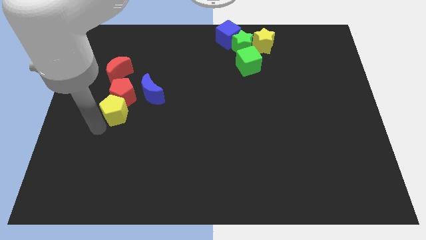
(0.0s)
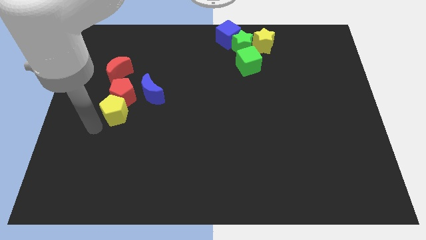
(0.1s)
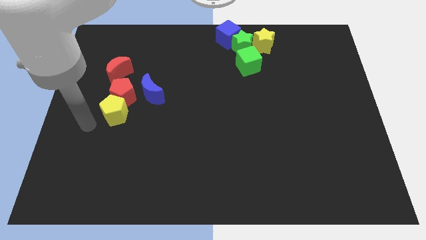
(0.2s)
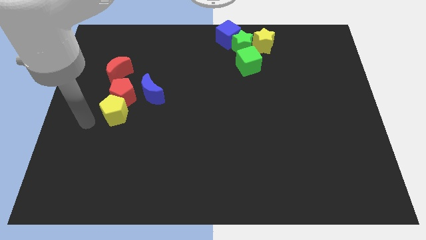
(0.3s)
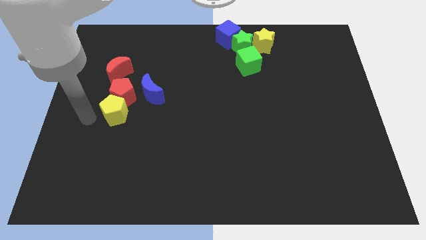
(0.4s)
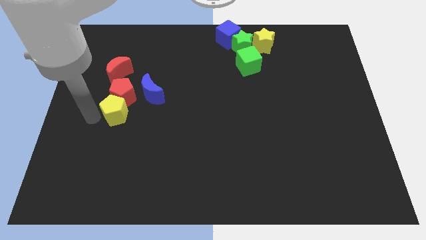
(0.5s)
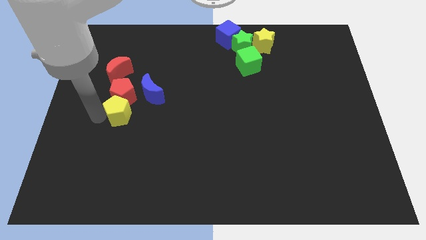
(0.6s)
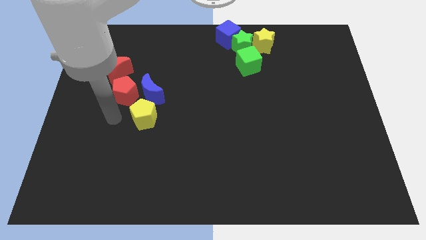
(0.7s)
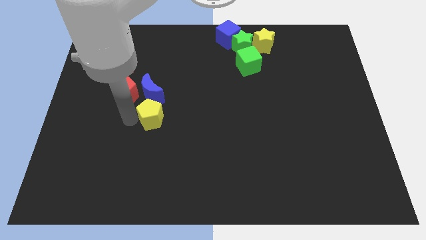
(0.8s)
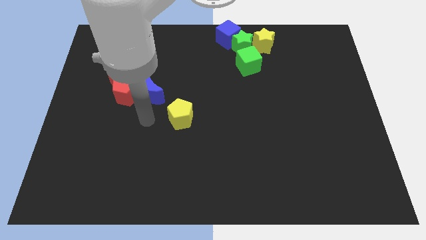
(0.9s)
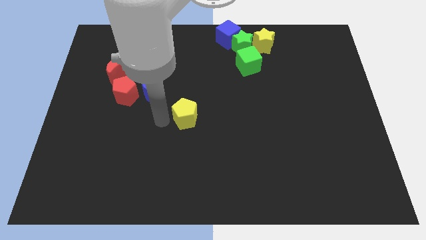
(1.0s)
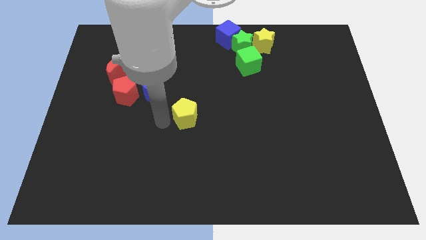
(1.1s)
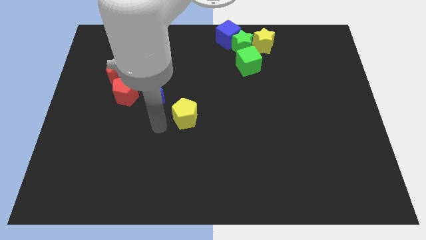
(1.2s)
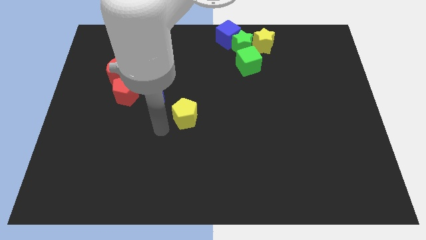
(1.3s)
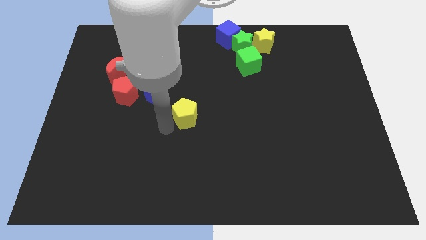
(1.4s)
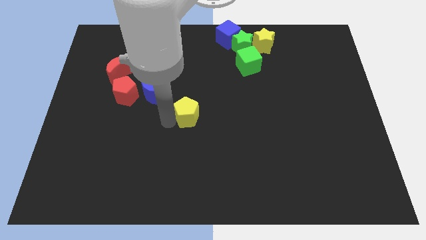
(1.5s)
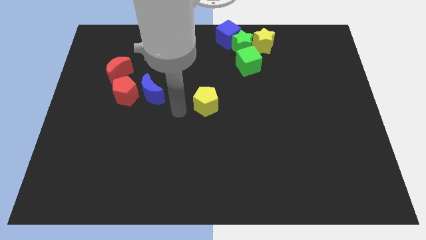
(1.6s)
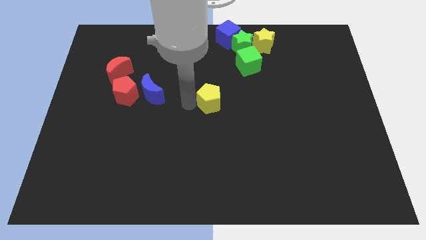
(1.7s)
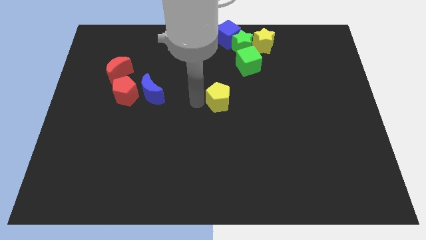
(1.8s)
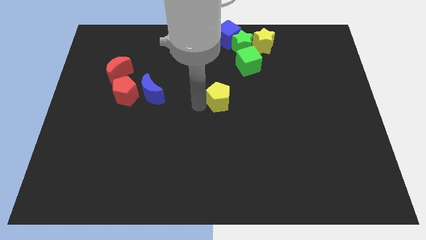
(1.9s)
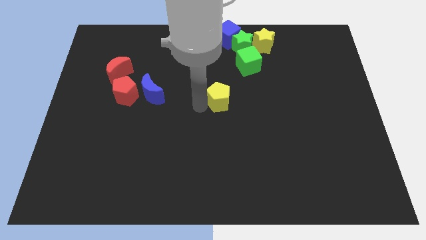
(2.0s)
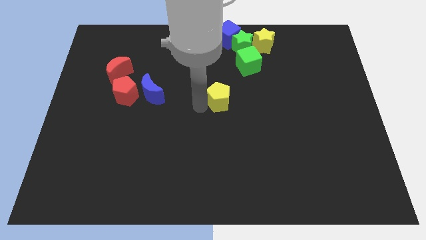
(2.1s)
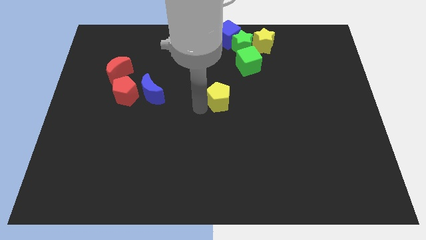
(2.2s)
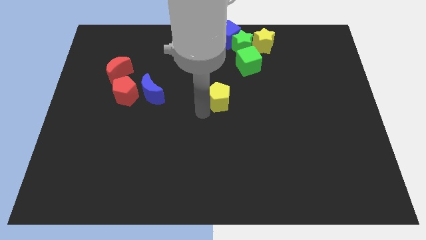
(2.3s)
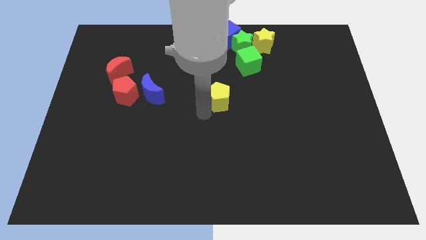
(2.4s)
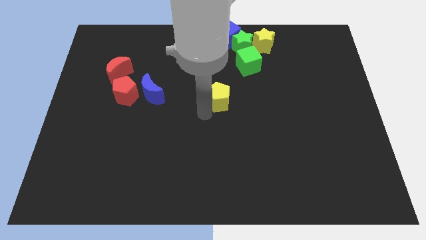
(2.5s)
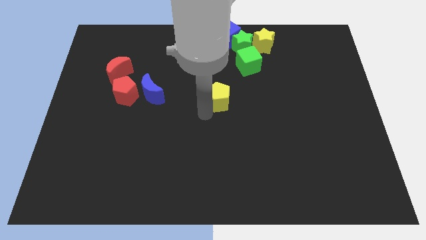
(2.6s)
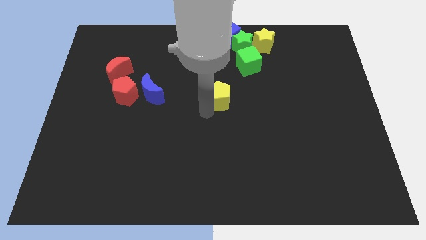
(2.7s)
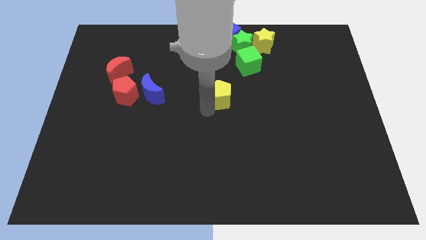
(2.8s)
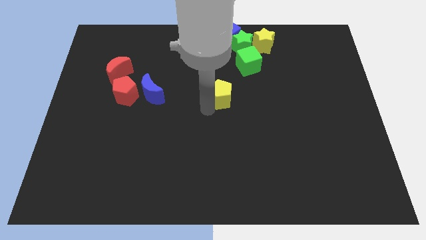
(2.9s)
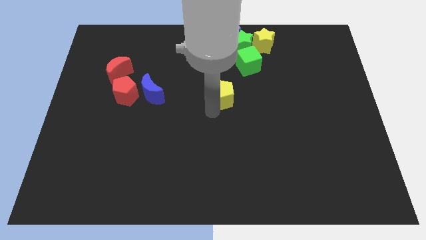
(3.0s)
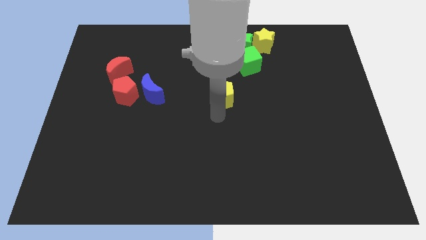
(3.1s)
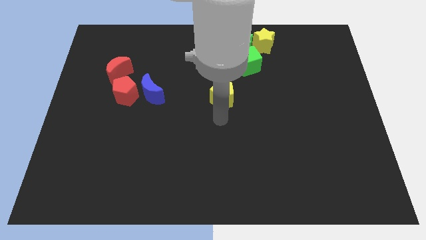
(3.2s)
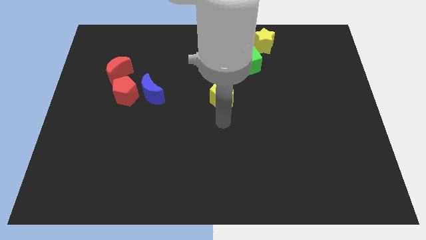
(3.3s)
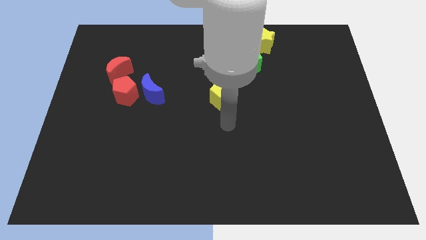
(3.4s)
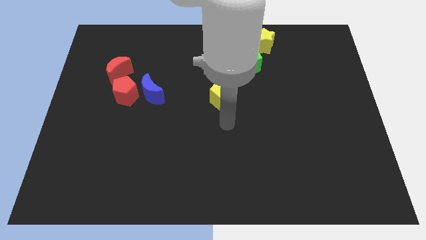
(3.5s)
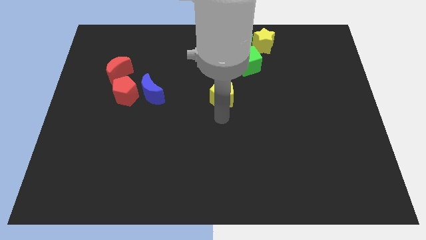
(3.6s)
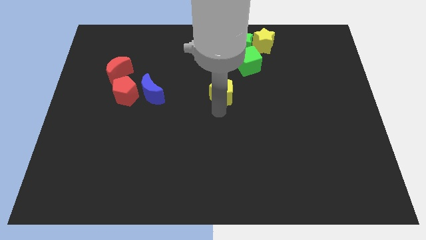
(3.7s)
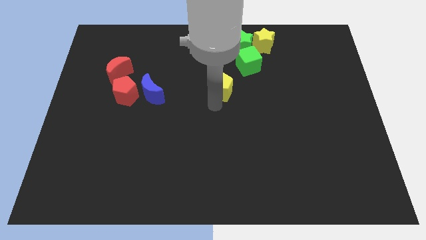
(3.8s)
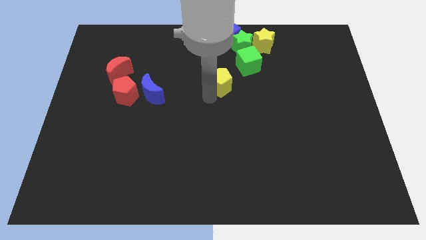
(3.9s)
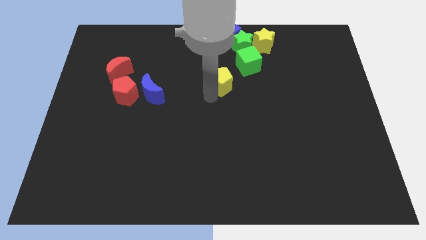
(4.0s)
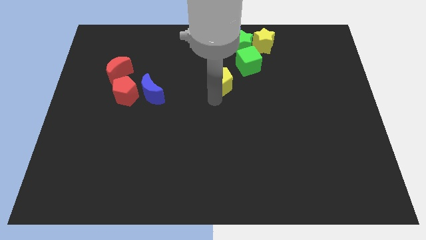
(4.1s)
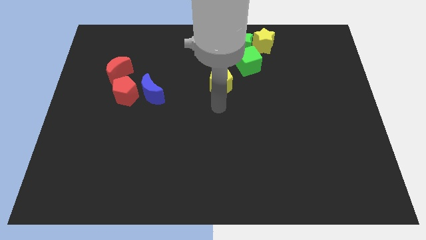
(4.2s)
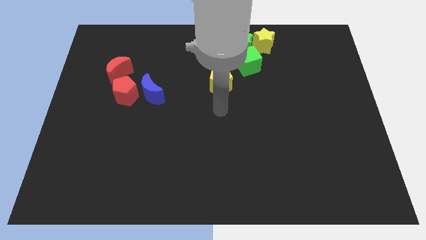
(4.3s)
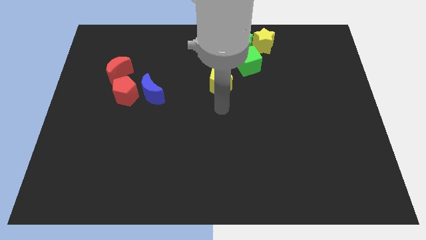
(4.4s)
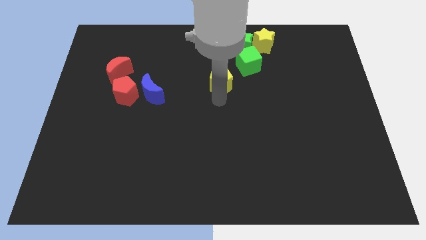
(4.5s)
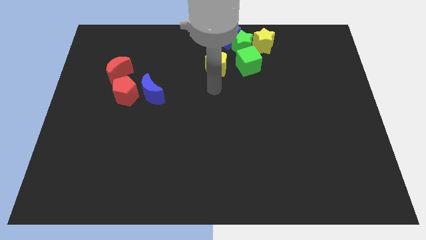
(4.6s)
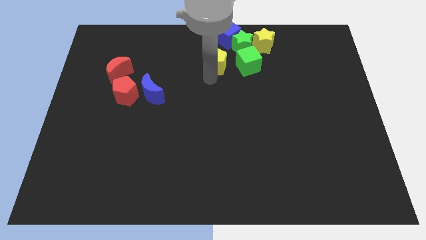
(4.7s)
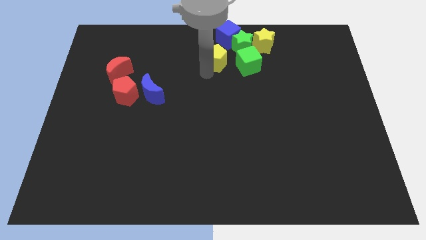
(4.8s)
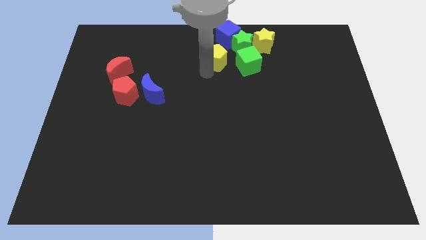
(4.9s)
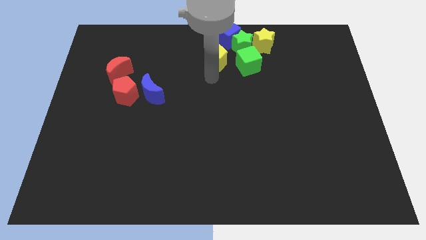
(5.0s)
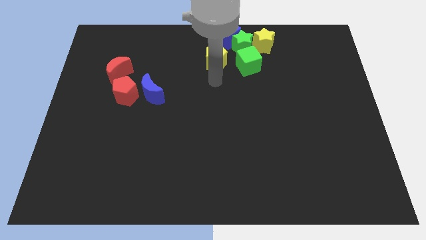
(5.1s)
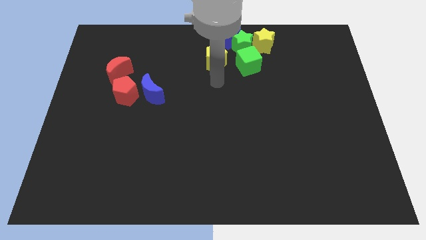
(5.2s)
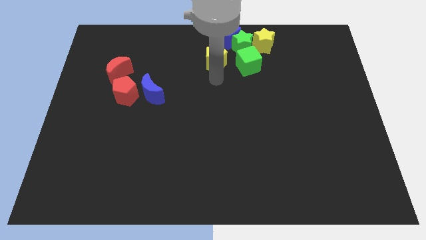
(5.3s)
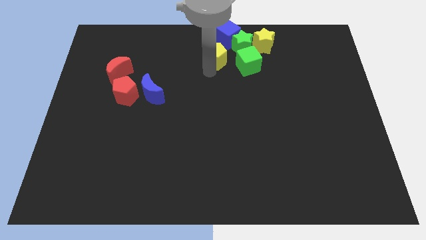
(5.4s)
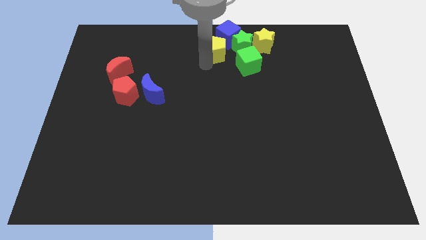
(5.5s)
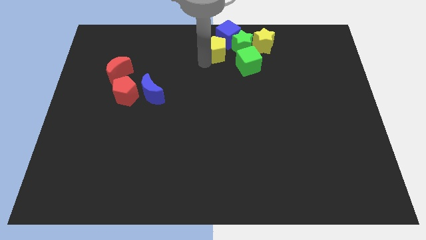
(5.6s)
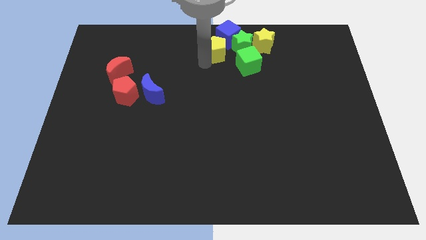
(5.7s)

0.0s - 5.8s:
push yellow pentagon into group of blocks

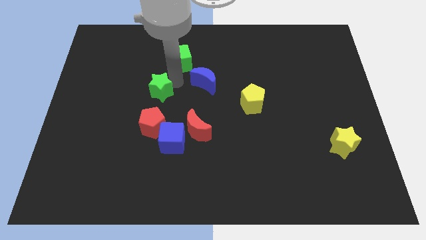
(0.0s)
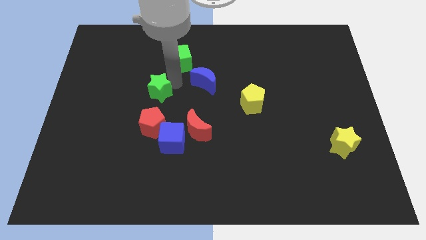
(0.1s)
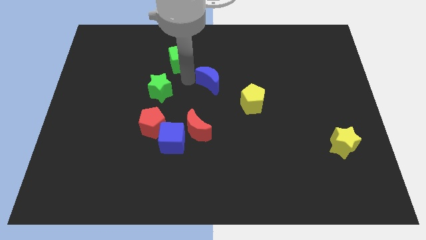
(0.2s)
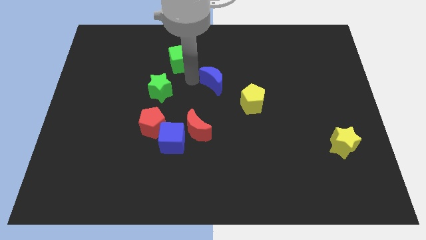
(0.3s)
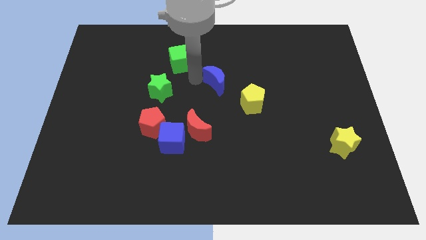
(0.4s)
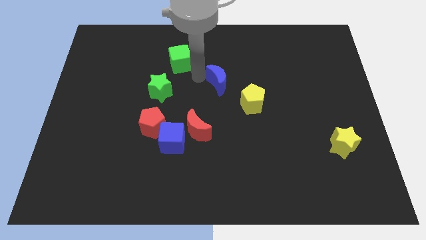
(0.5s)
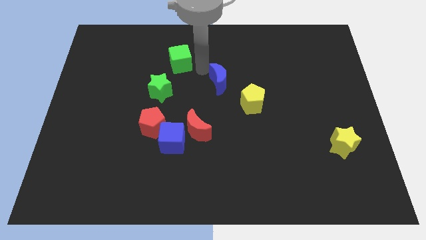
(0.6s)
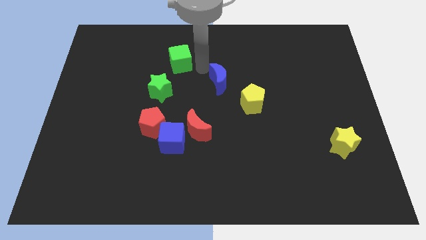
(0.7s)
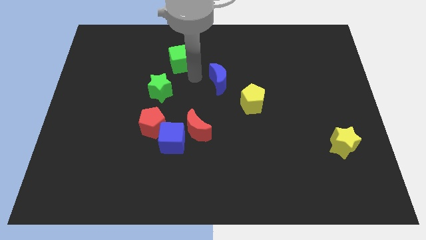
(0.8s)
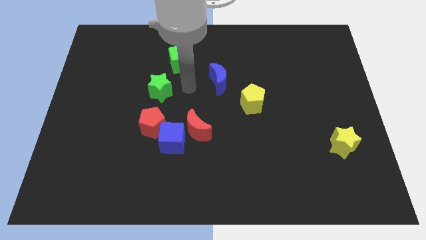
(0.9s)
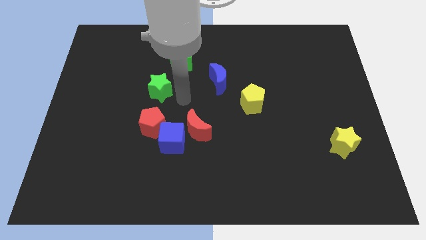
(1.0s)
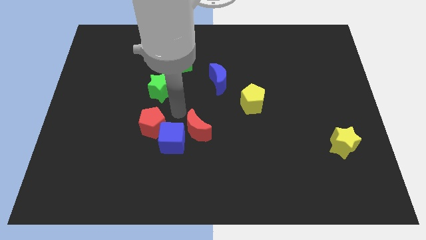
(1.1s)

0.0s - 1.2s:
place the blue crescent diagonally to the top left side of the yellow pentagon

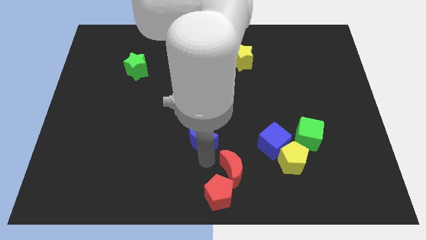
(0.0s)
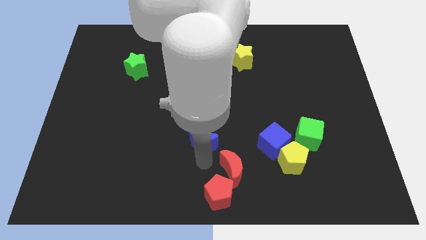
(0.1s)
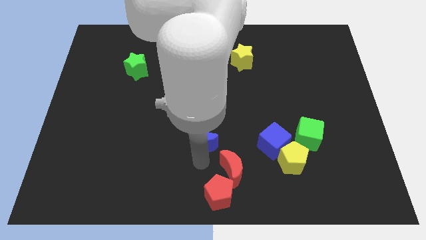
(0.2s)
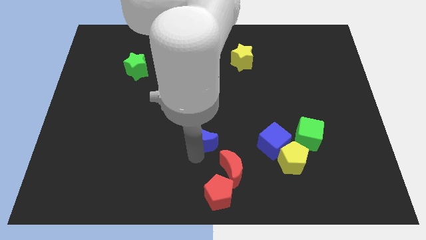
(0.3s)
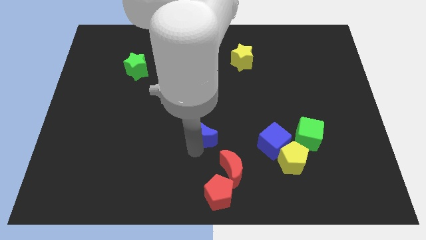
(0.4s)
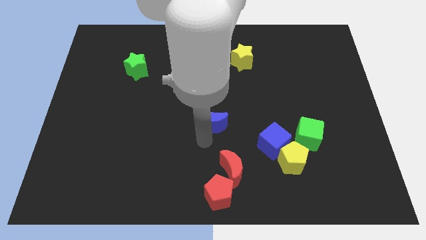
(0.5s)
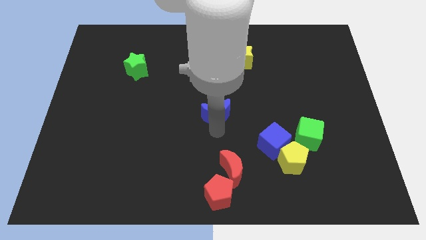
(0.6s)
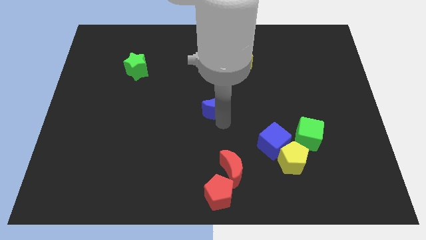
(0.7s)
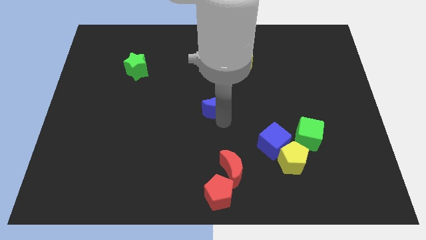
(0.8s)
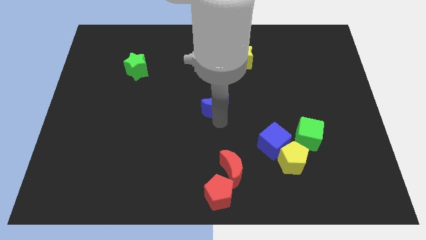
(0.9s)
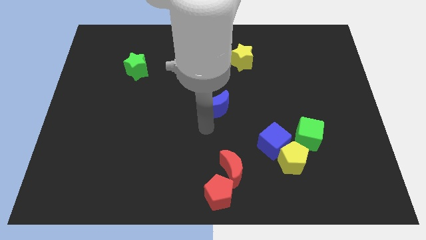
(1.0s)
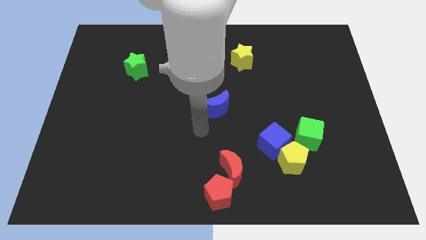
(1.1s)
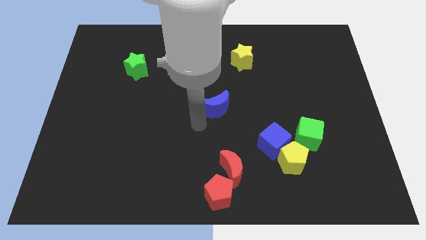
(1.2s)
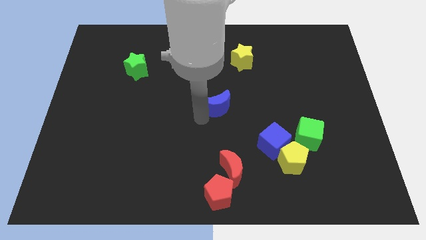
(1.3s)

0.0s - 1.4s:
place the blue crescent at the center of the board

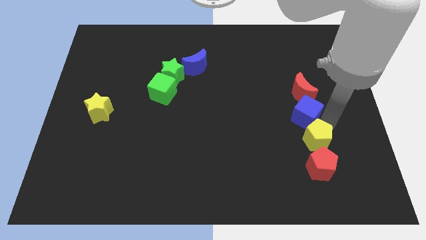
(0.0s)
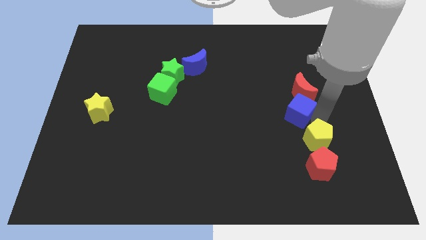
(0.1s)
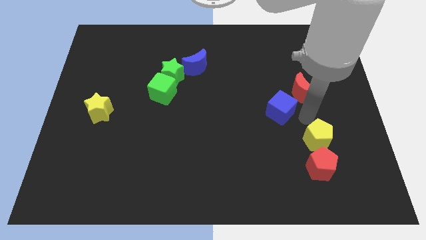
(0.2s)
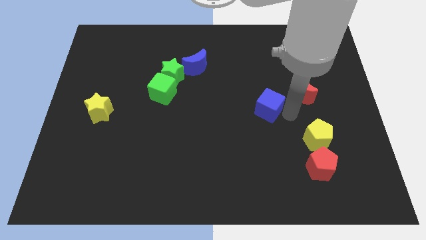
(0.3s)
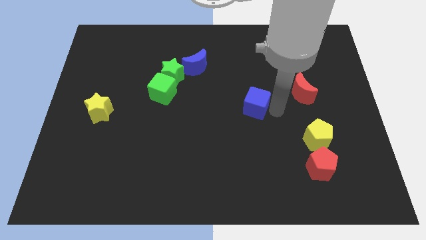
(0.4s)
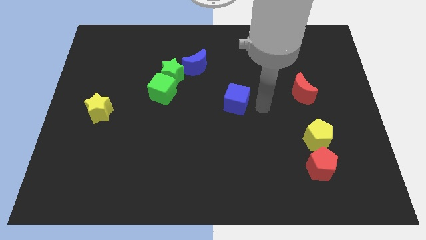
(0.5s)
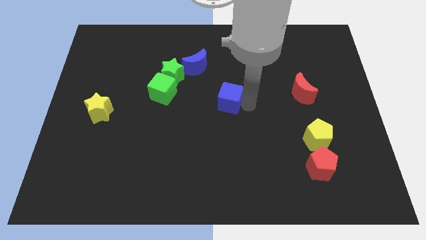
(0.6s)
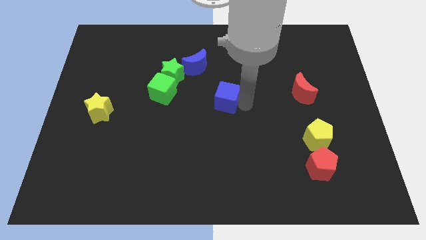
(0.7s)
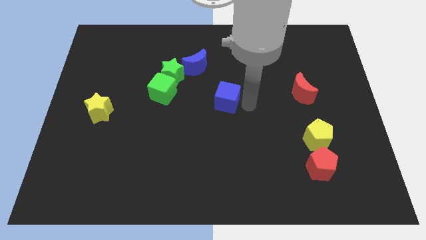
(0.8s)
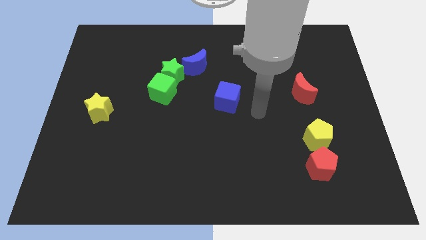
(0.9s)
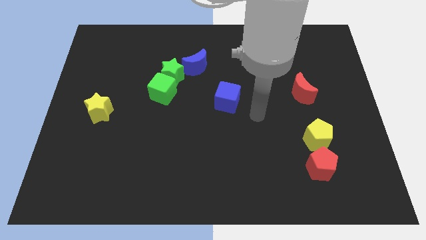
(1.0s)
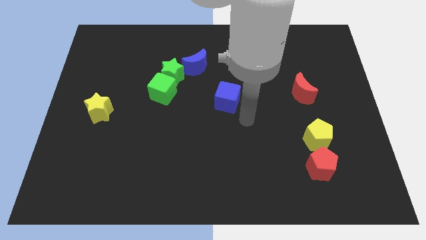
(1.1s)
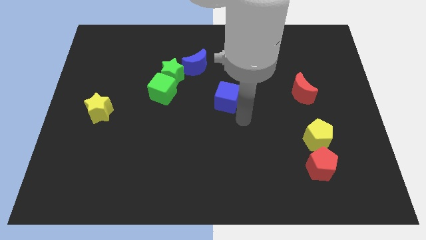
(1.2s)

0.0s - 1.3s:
place the blue cube at the center of the board
